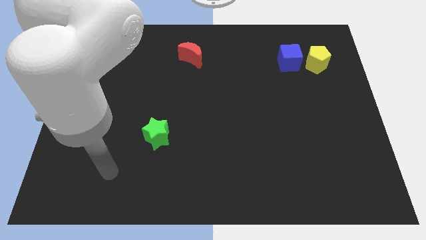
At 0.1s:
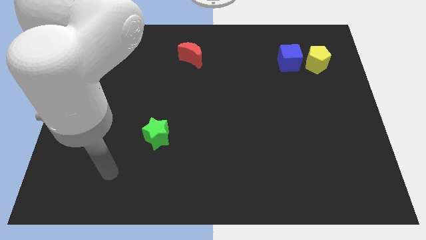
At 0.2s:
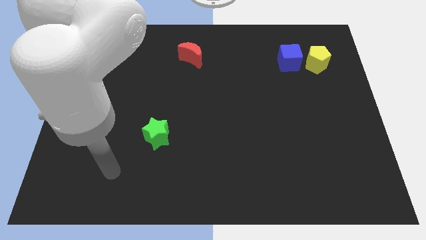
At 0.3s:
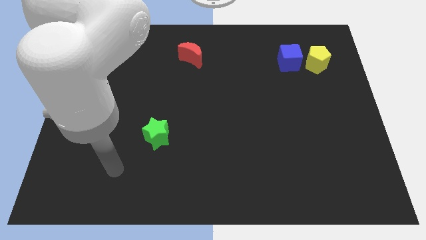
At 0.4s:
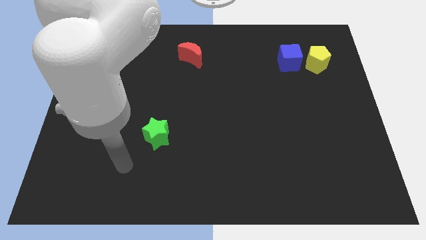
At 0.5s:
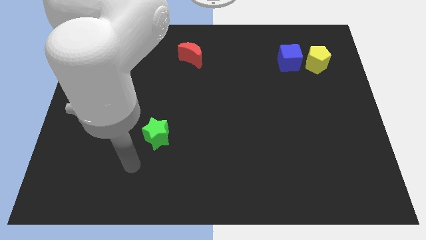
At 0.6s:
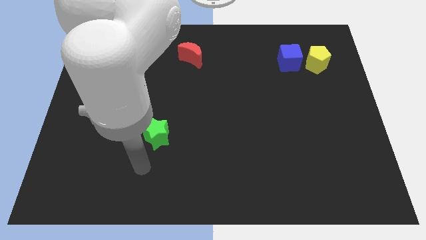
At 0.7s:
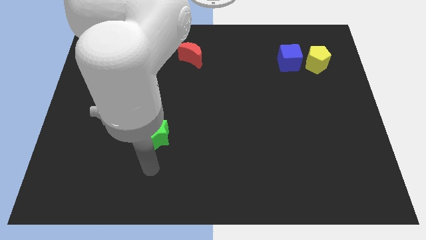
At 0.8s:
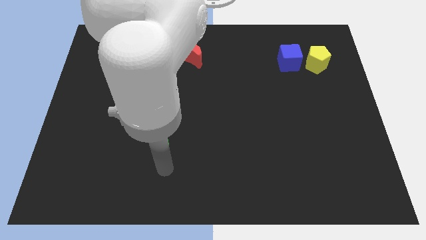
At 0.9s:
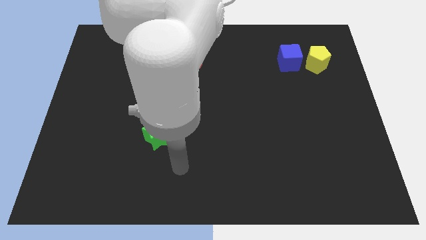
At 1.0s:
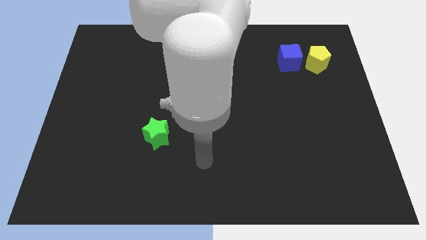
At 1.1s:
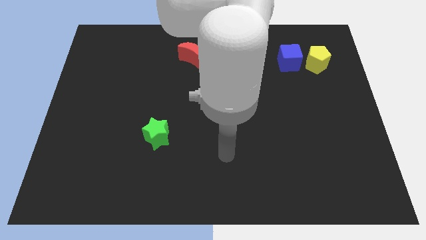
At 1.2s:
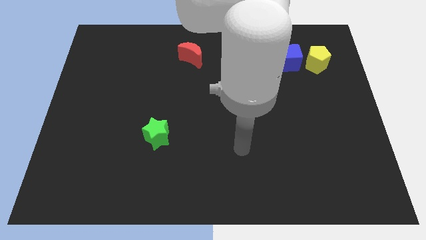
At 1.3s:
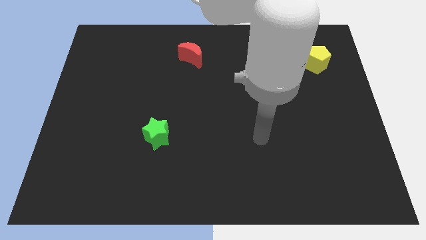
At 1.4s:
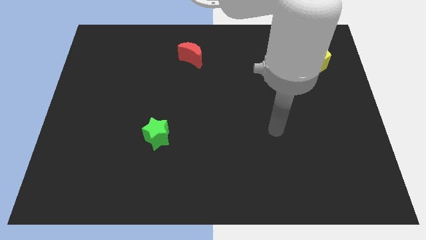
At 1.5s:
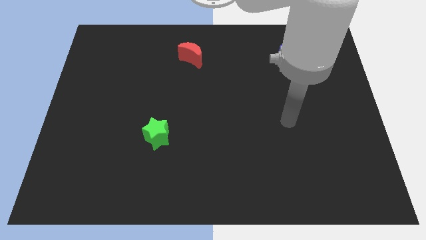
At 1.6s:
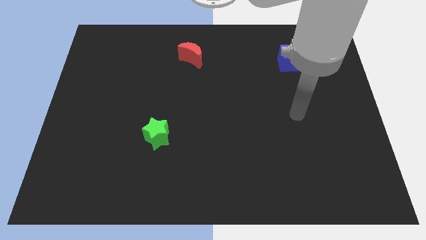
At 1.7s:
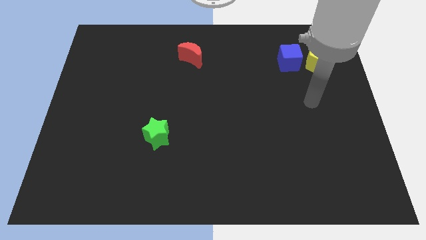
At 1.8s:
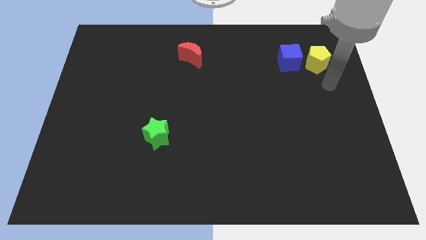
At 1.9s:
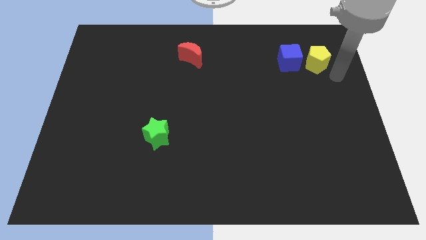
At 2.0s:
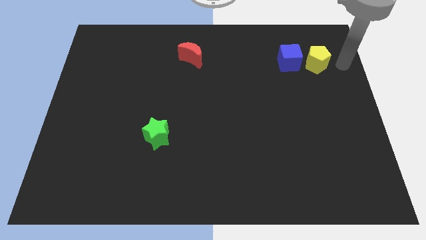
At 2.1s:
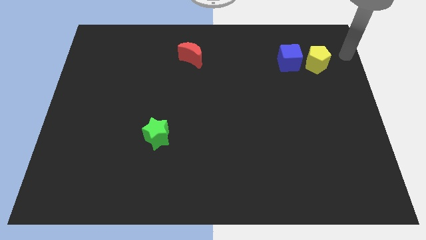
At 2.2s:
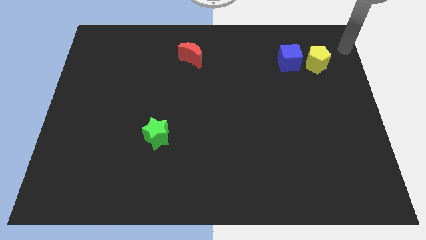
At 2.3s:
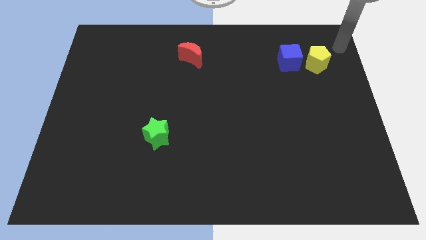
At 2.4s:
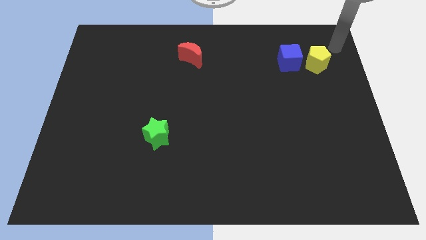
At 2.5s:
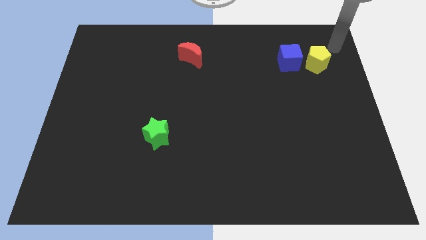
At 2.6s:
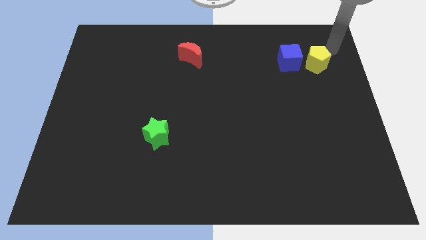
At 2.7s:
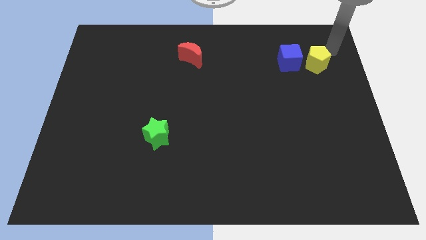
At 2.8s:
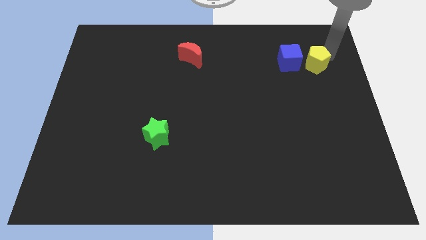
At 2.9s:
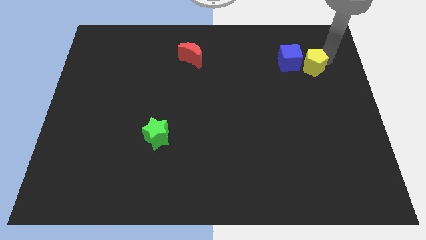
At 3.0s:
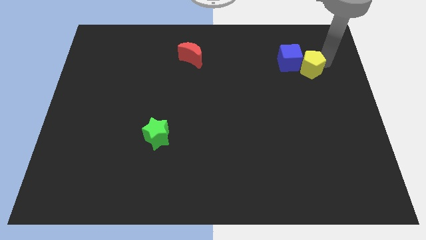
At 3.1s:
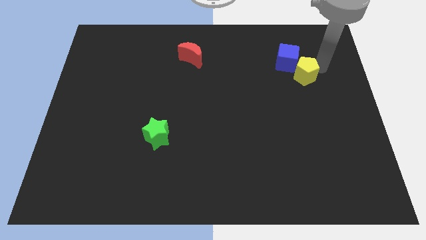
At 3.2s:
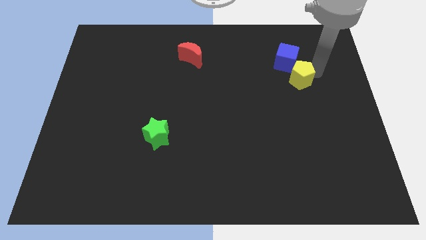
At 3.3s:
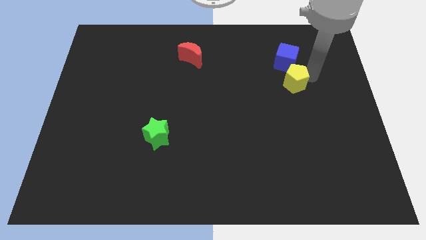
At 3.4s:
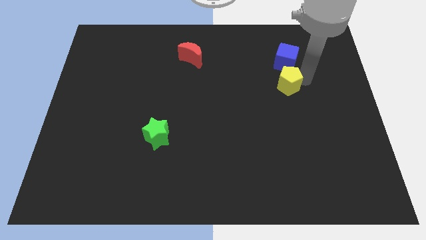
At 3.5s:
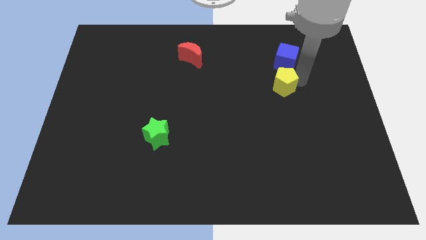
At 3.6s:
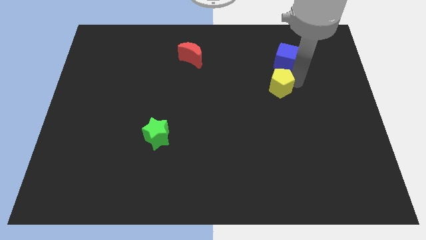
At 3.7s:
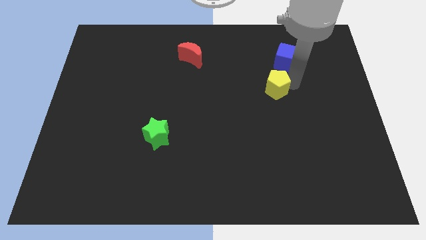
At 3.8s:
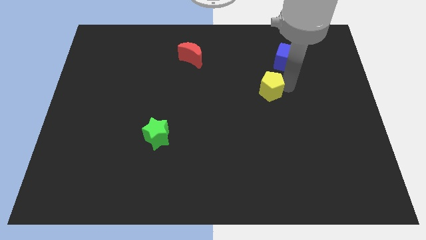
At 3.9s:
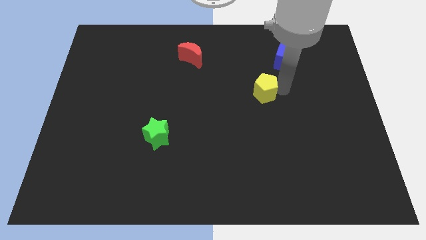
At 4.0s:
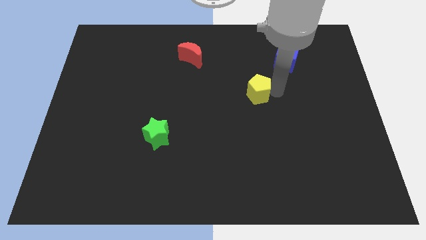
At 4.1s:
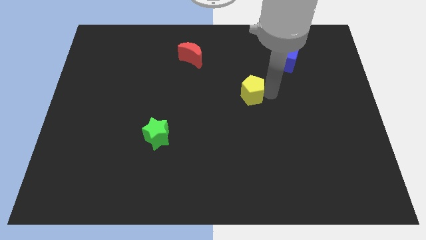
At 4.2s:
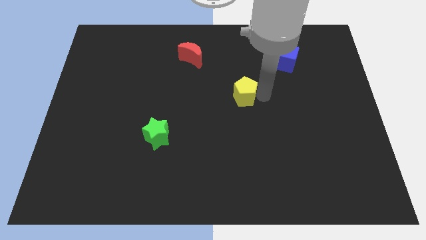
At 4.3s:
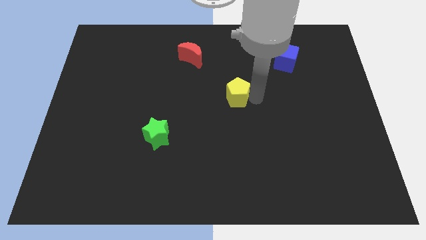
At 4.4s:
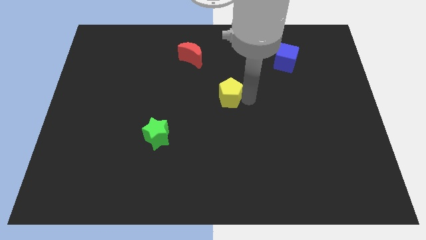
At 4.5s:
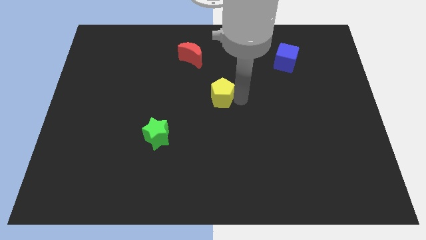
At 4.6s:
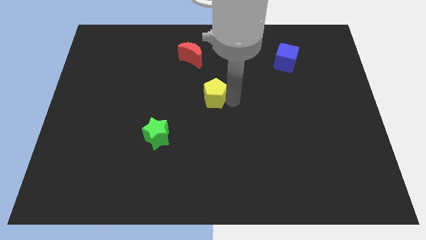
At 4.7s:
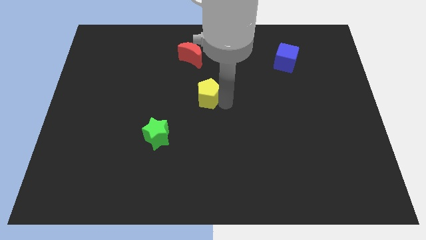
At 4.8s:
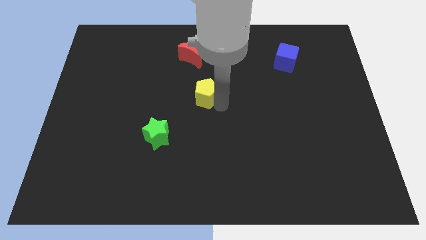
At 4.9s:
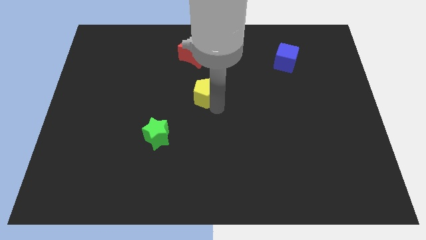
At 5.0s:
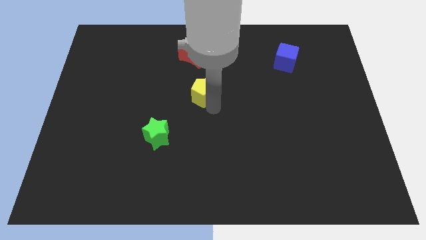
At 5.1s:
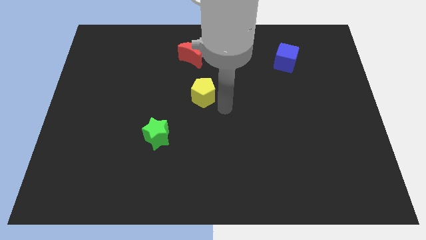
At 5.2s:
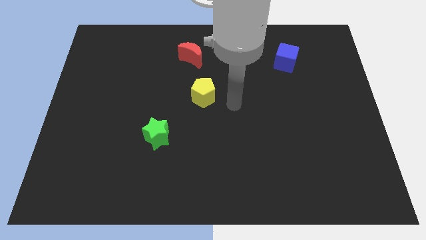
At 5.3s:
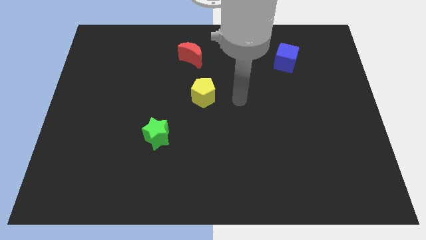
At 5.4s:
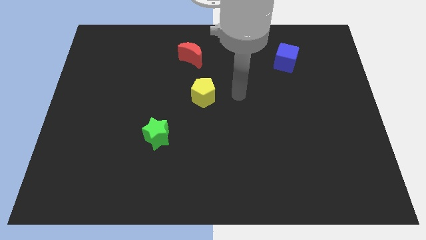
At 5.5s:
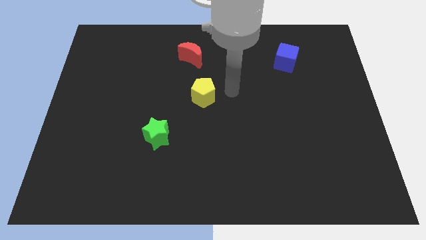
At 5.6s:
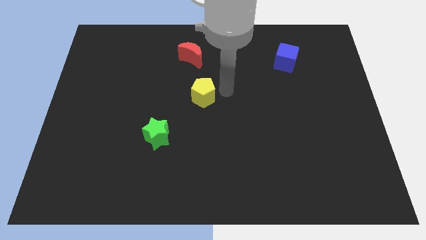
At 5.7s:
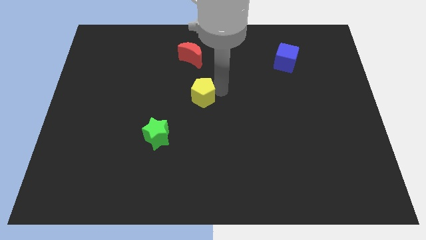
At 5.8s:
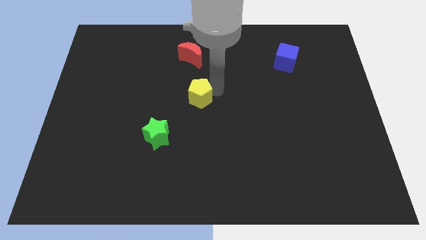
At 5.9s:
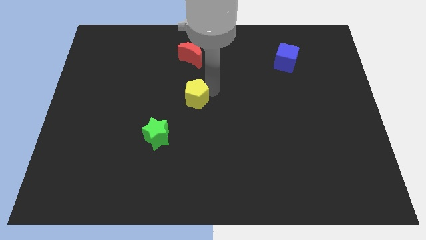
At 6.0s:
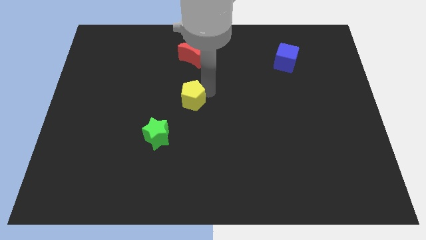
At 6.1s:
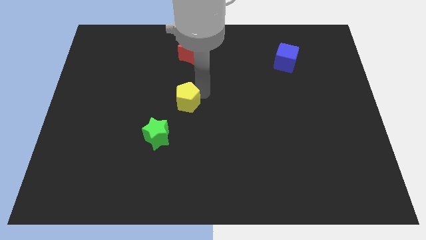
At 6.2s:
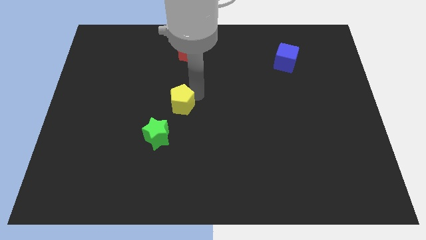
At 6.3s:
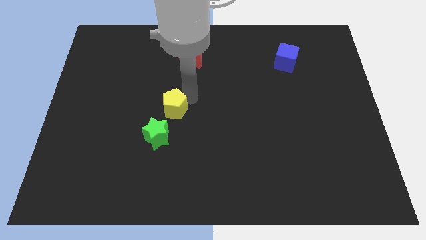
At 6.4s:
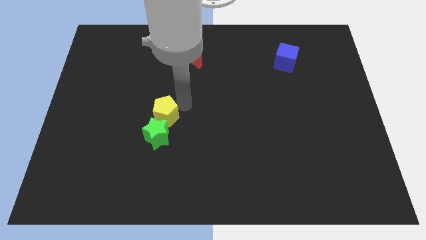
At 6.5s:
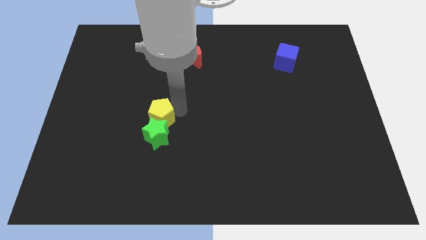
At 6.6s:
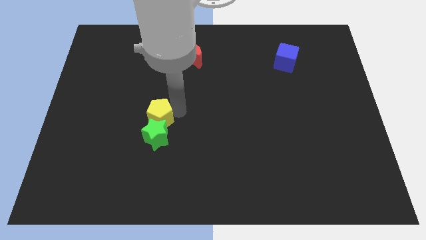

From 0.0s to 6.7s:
move the yellow block to the green star

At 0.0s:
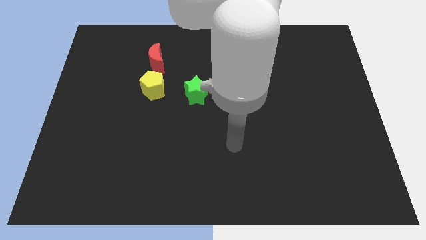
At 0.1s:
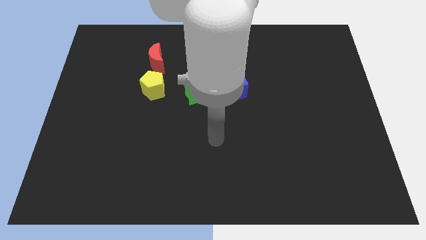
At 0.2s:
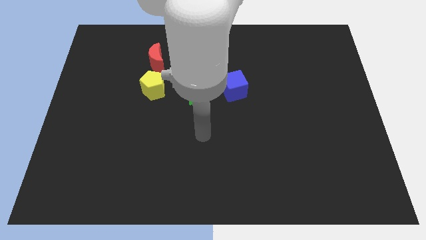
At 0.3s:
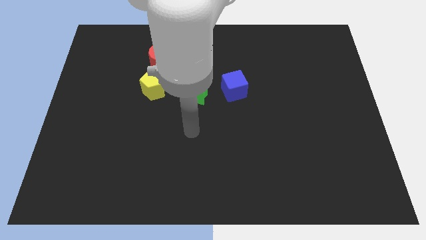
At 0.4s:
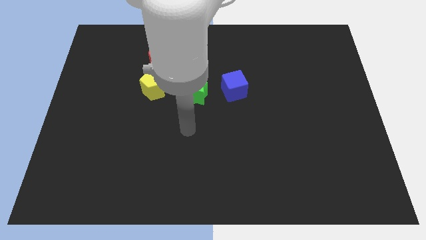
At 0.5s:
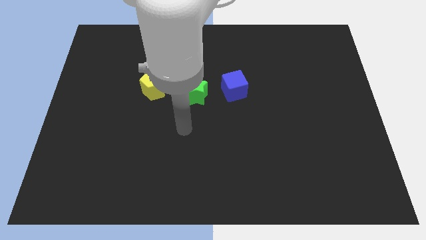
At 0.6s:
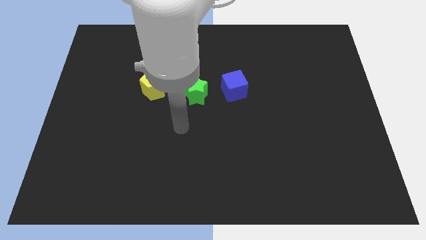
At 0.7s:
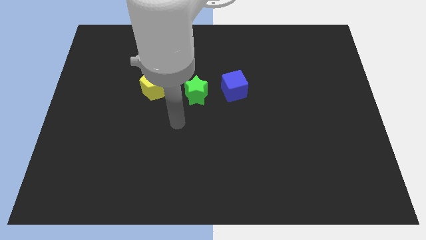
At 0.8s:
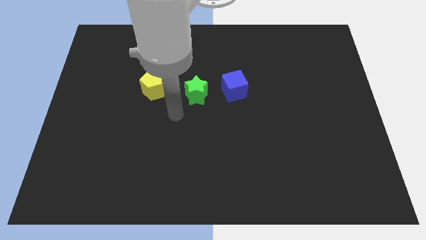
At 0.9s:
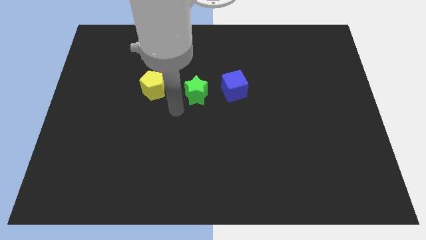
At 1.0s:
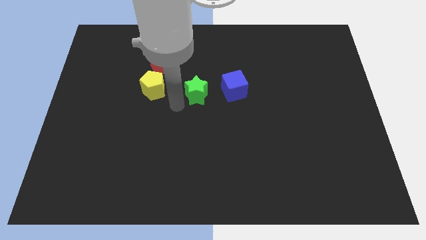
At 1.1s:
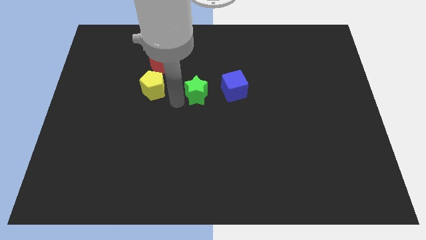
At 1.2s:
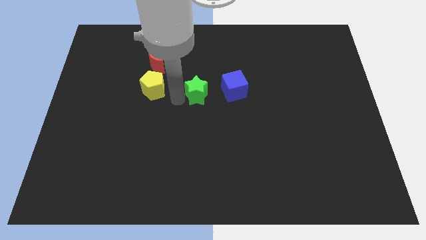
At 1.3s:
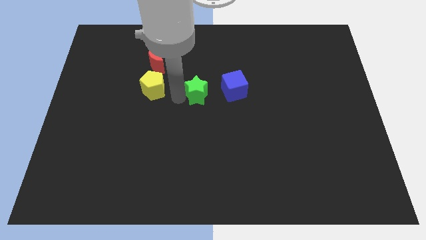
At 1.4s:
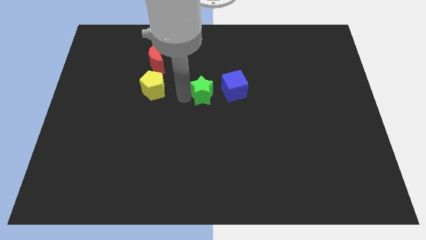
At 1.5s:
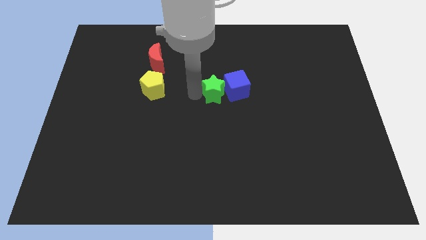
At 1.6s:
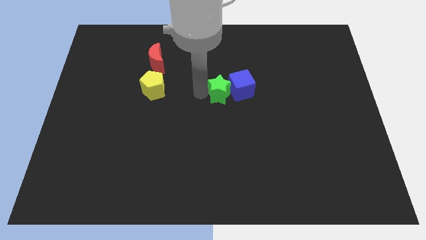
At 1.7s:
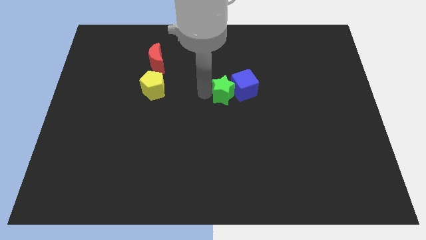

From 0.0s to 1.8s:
move the green star next to the blue cube

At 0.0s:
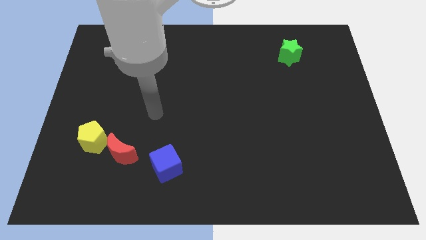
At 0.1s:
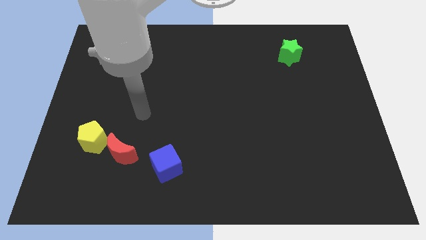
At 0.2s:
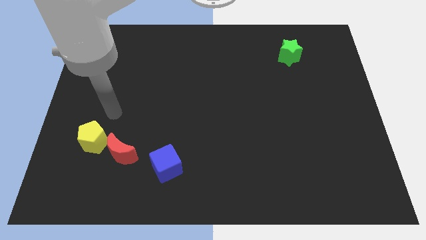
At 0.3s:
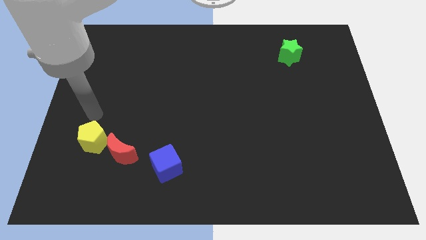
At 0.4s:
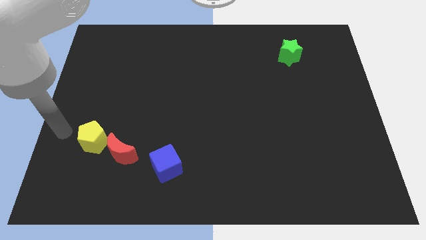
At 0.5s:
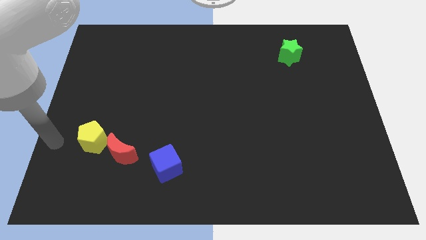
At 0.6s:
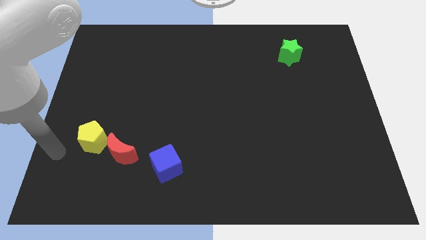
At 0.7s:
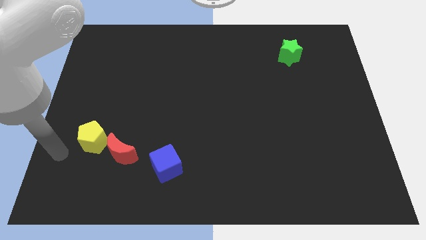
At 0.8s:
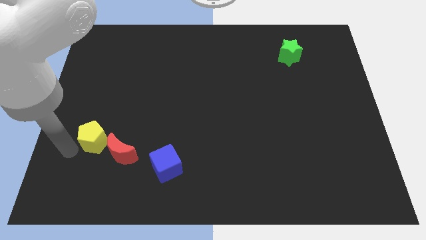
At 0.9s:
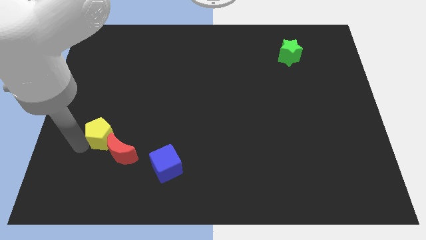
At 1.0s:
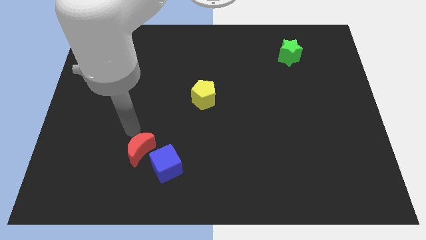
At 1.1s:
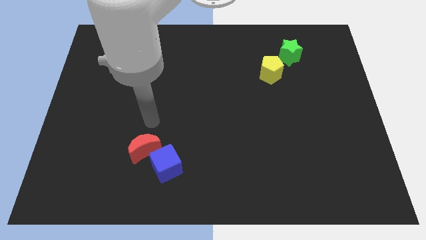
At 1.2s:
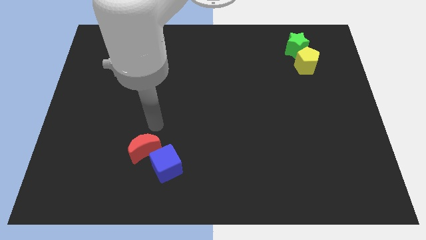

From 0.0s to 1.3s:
slide the yellow pentagon next to the green star
